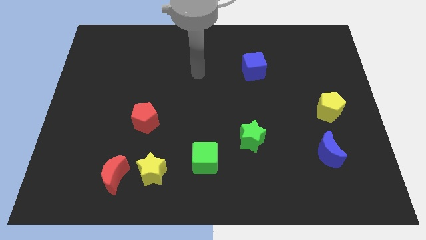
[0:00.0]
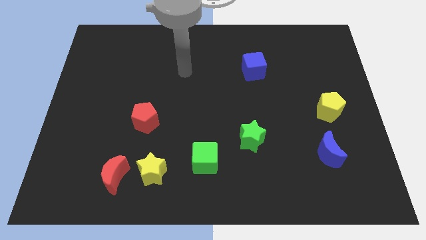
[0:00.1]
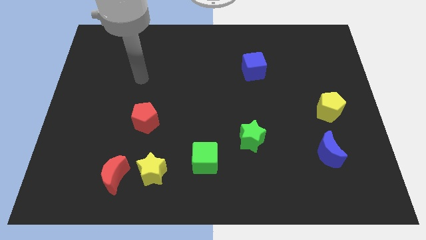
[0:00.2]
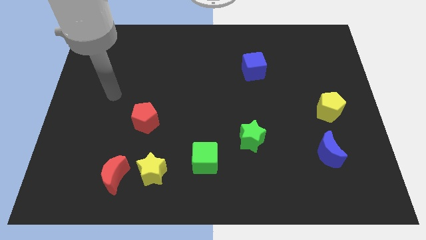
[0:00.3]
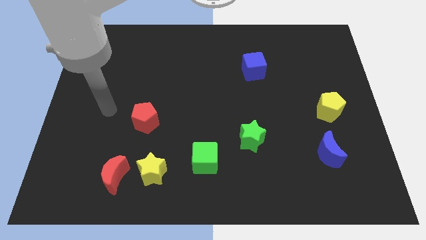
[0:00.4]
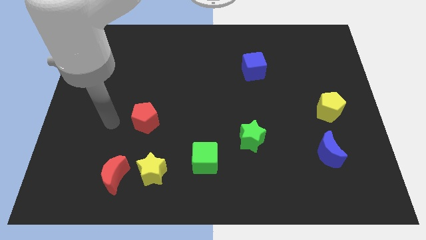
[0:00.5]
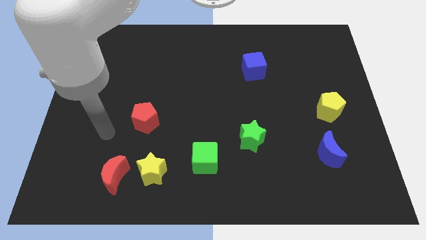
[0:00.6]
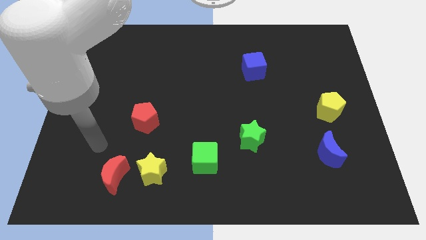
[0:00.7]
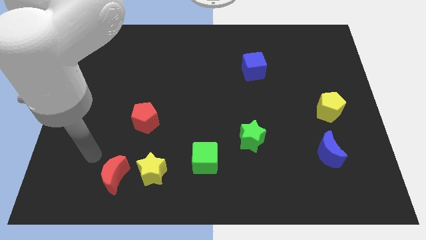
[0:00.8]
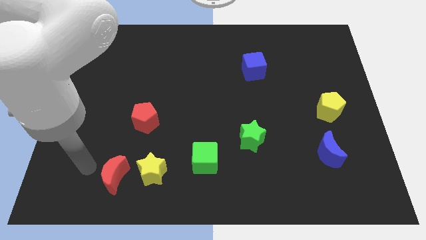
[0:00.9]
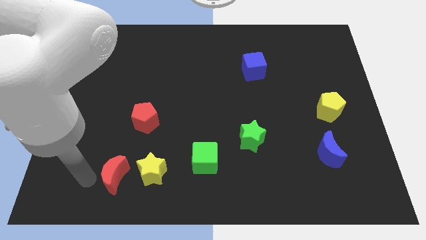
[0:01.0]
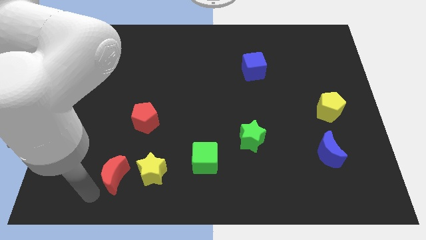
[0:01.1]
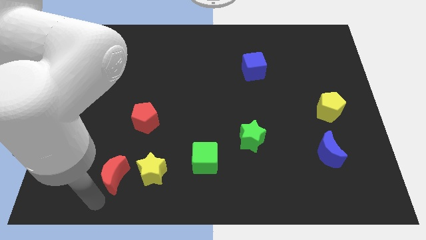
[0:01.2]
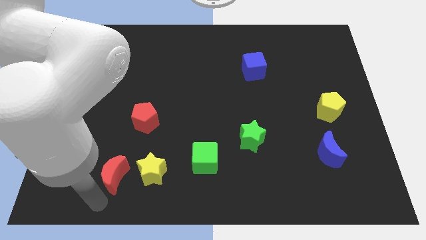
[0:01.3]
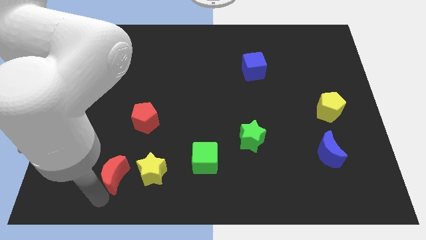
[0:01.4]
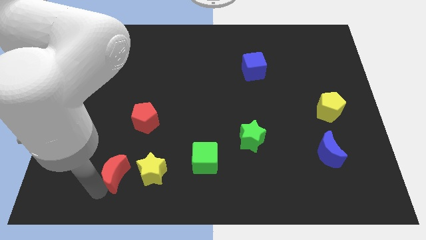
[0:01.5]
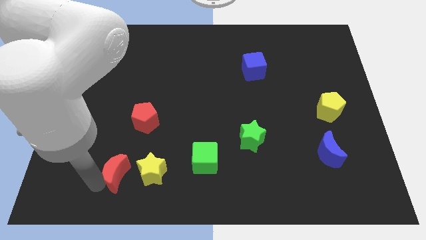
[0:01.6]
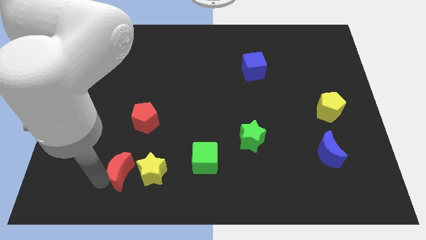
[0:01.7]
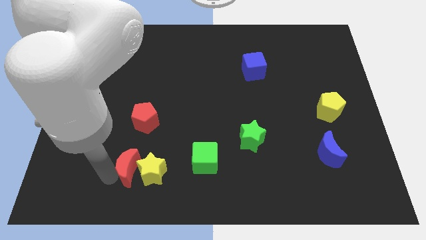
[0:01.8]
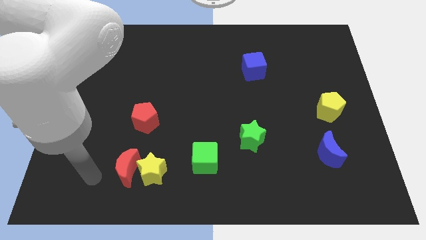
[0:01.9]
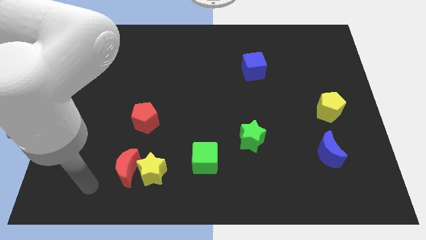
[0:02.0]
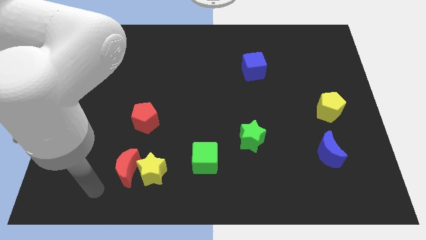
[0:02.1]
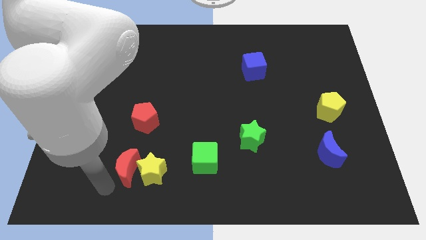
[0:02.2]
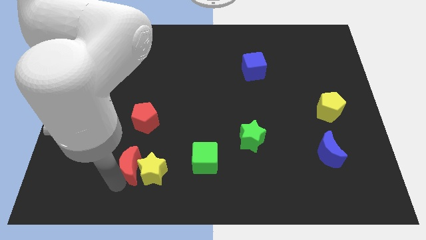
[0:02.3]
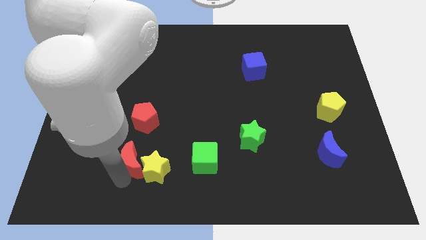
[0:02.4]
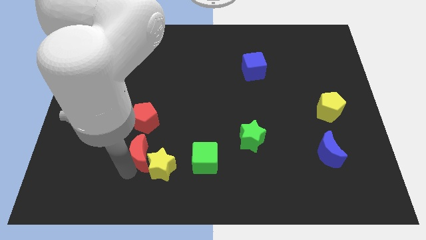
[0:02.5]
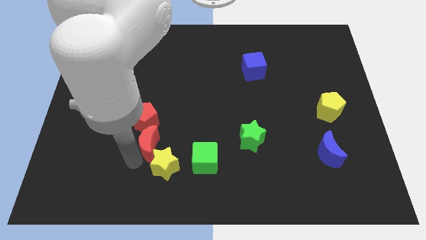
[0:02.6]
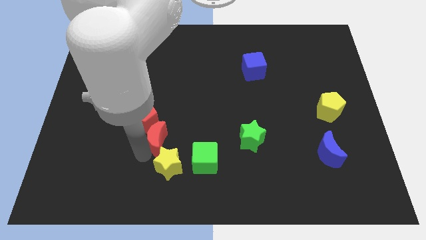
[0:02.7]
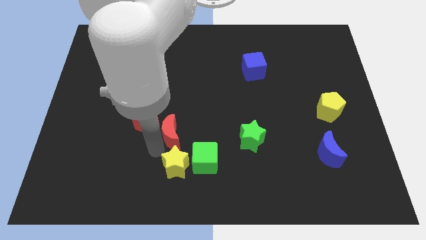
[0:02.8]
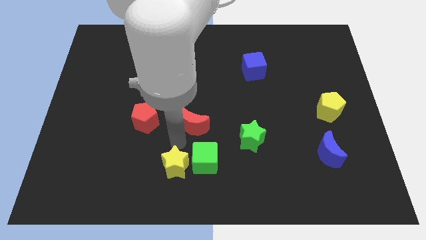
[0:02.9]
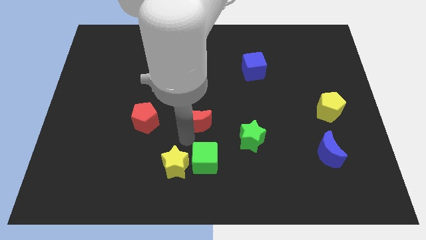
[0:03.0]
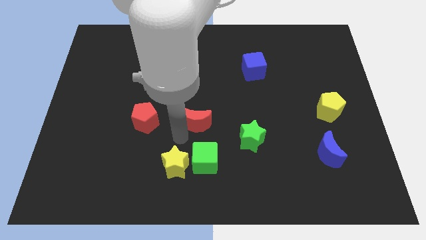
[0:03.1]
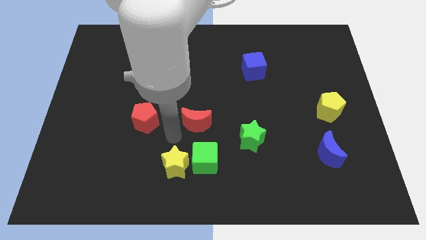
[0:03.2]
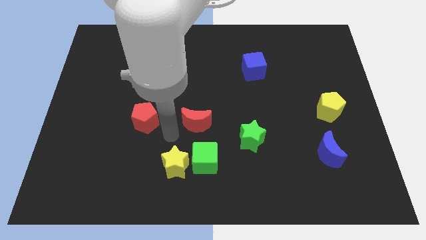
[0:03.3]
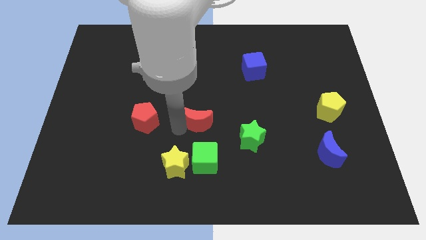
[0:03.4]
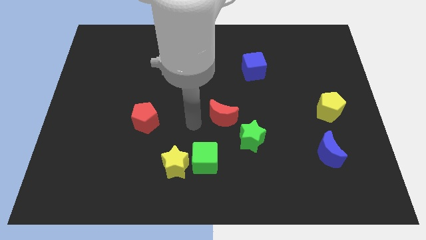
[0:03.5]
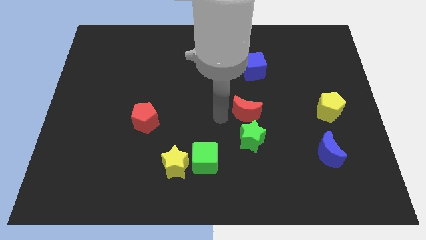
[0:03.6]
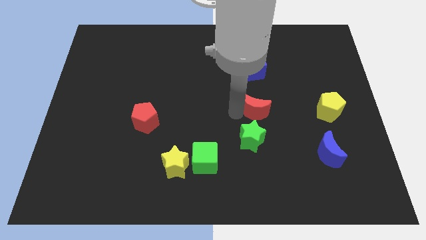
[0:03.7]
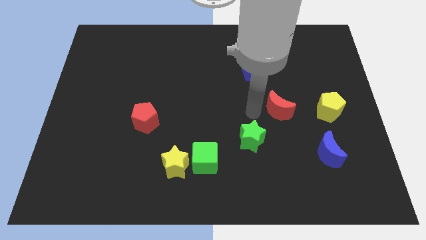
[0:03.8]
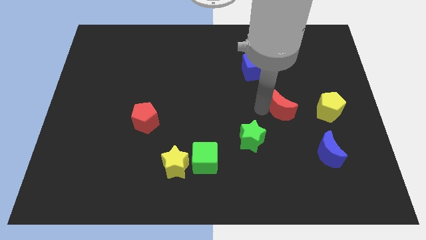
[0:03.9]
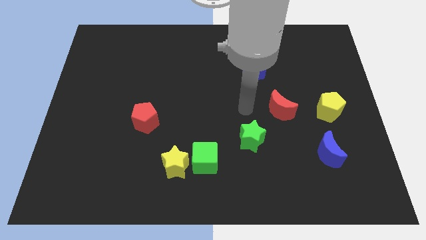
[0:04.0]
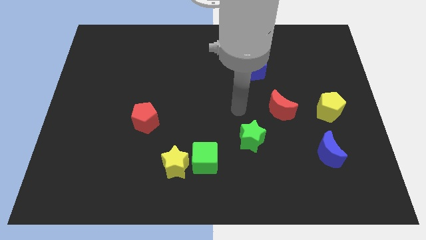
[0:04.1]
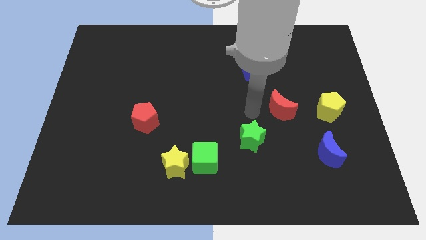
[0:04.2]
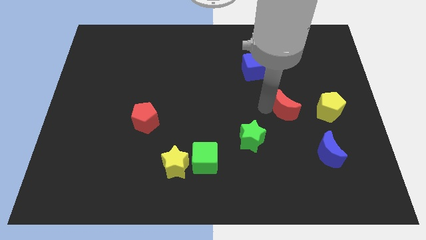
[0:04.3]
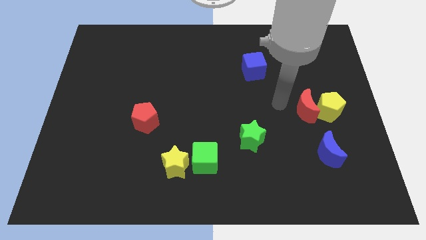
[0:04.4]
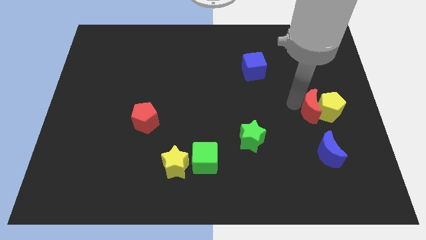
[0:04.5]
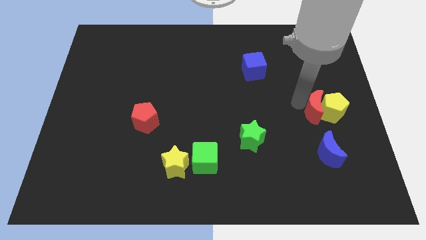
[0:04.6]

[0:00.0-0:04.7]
slide the red moon next to the yellow pentagon

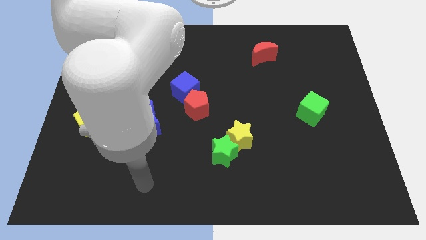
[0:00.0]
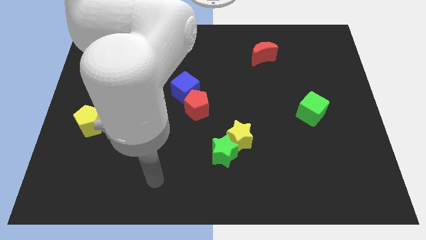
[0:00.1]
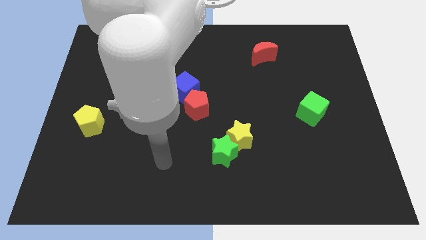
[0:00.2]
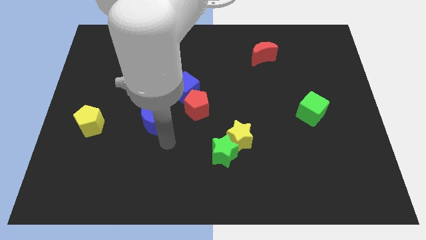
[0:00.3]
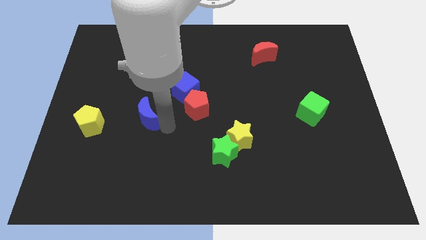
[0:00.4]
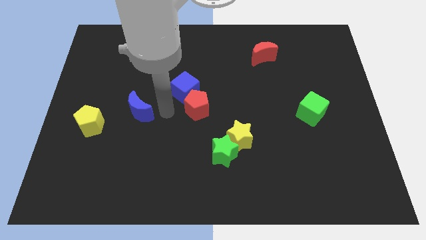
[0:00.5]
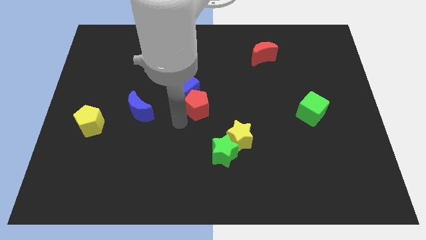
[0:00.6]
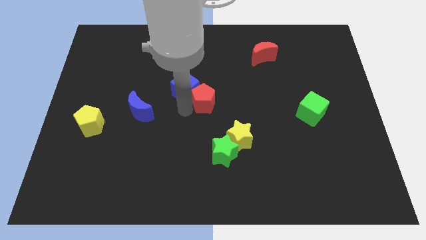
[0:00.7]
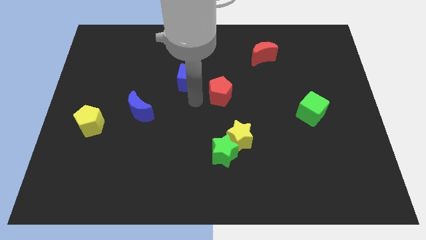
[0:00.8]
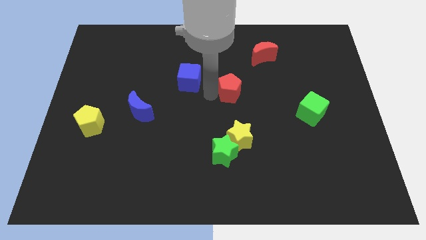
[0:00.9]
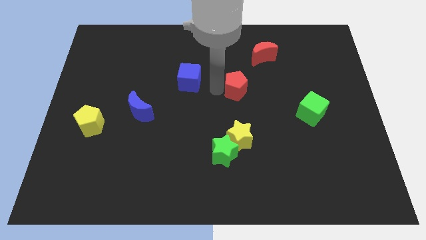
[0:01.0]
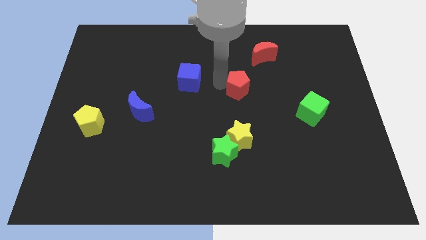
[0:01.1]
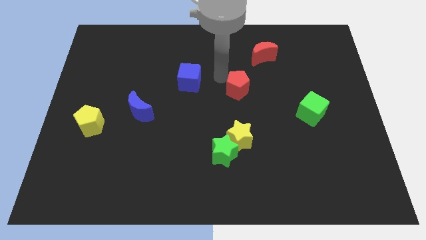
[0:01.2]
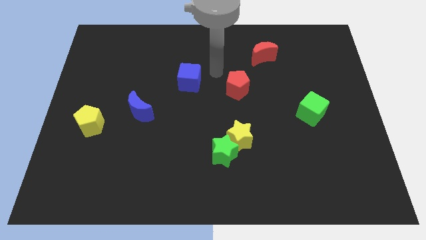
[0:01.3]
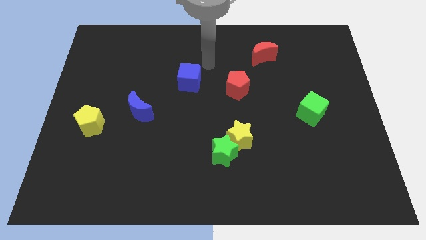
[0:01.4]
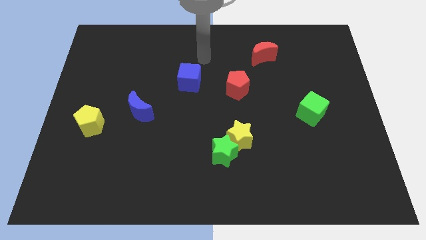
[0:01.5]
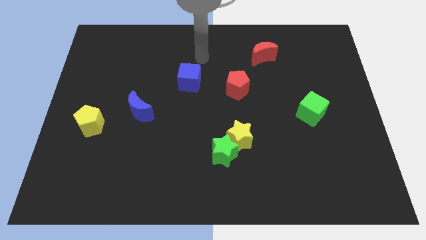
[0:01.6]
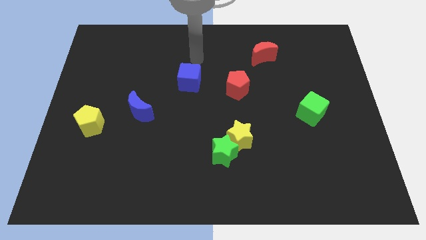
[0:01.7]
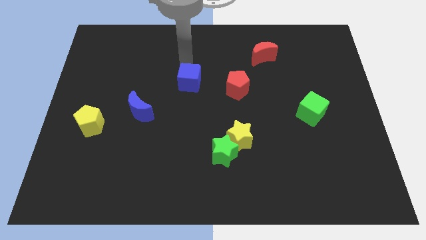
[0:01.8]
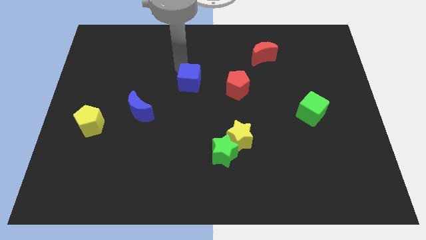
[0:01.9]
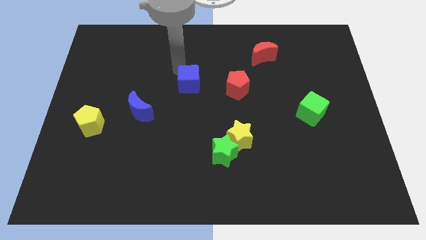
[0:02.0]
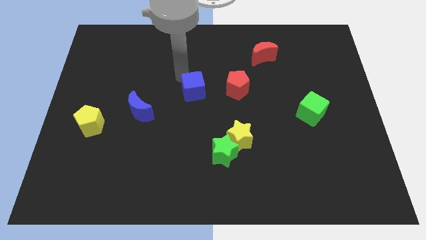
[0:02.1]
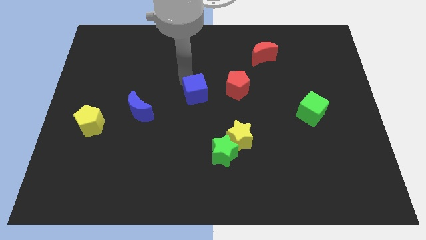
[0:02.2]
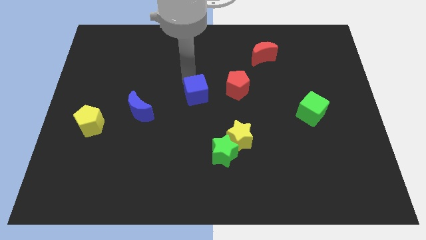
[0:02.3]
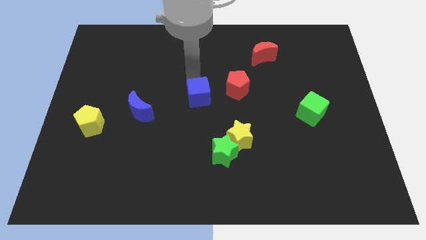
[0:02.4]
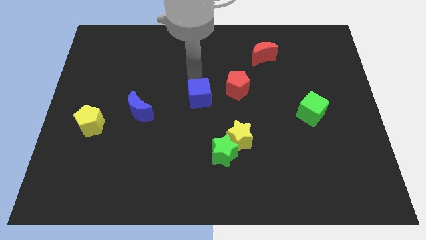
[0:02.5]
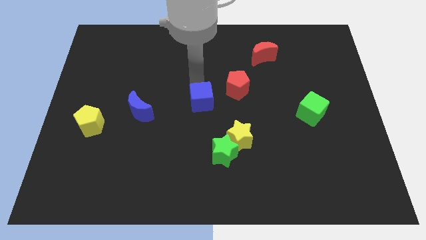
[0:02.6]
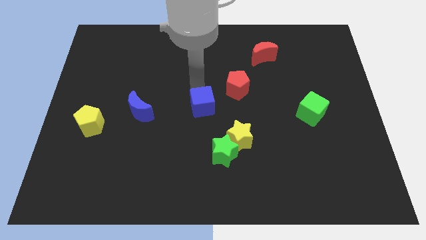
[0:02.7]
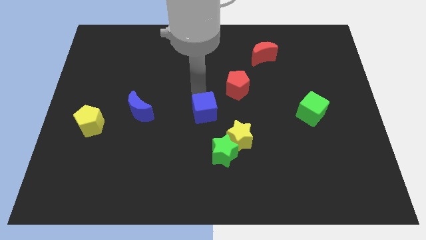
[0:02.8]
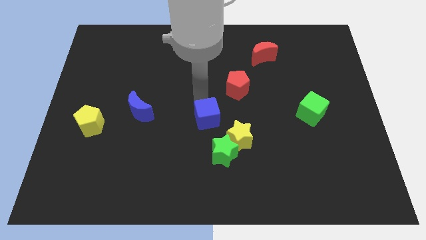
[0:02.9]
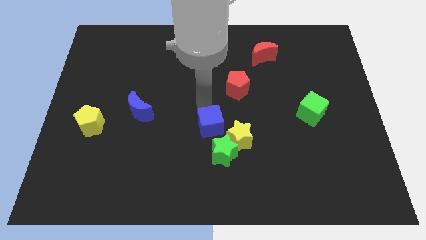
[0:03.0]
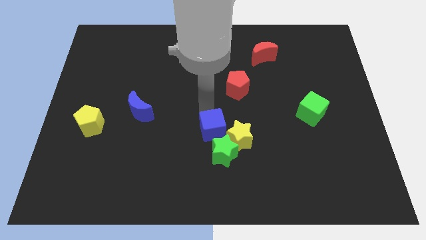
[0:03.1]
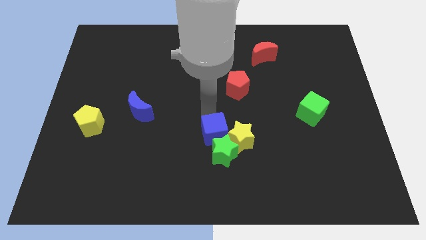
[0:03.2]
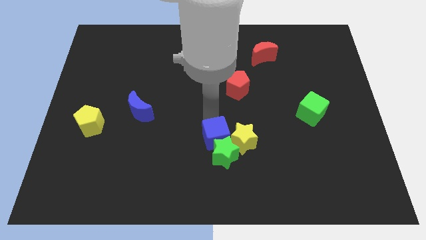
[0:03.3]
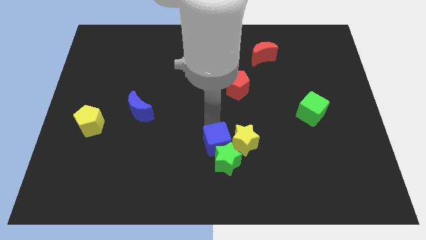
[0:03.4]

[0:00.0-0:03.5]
put the blue cube close to the green star
